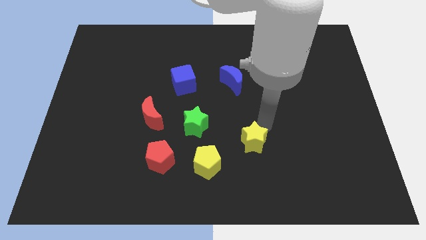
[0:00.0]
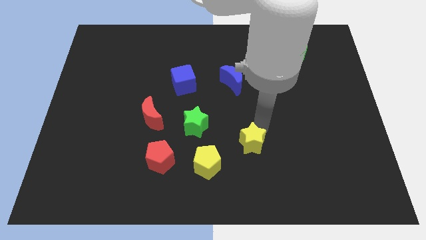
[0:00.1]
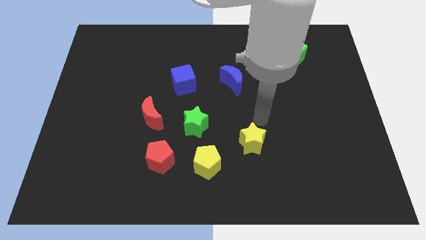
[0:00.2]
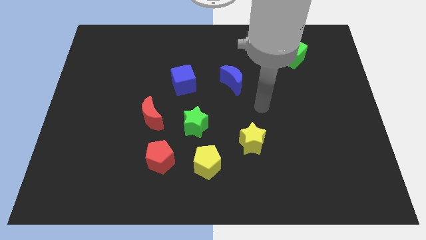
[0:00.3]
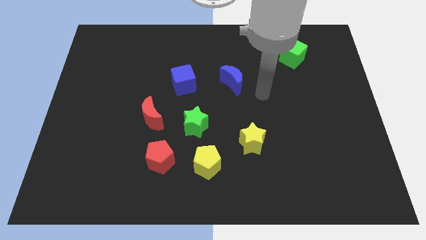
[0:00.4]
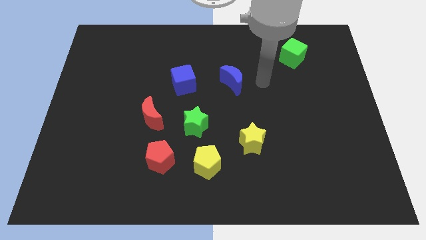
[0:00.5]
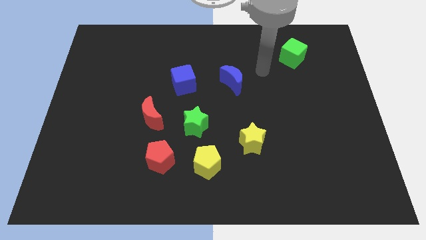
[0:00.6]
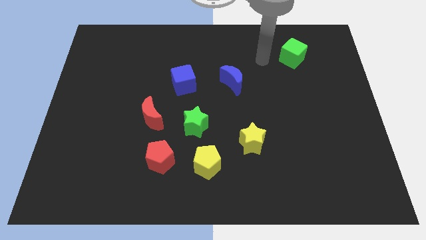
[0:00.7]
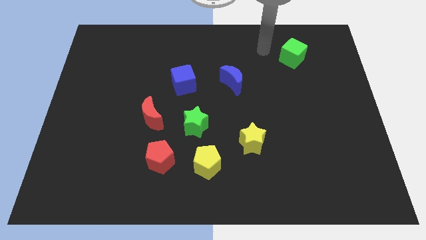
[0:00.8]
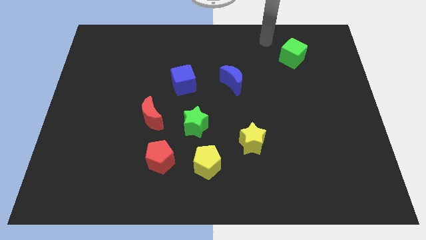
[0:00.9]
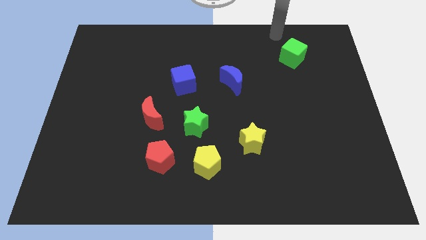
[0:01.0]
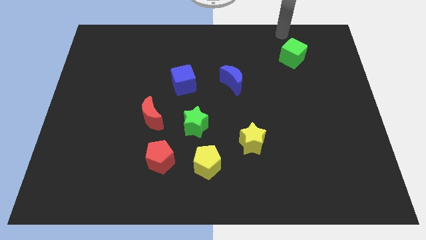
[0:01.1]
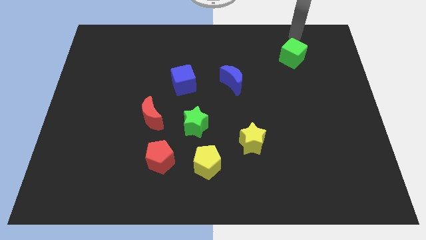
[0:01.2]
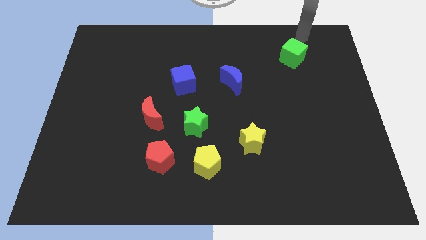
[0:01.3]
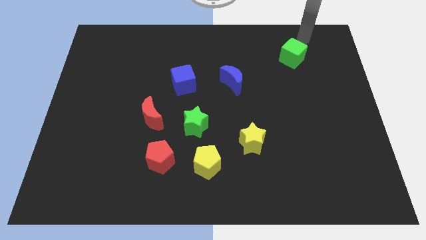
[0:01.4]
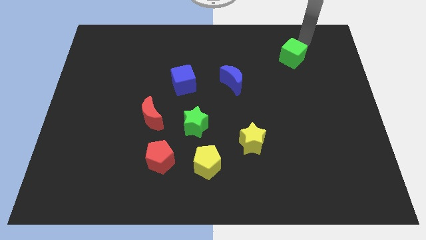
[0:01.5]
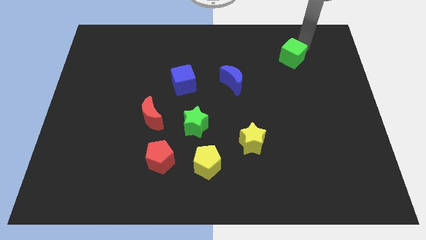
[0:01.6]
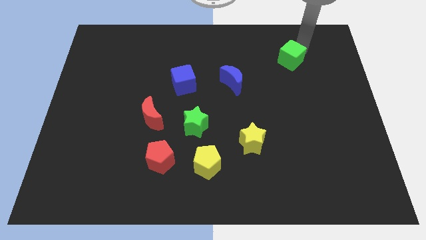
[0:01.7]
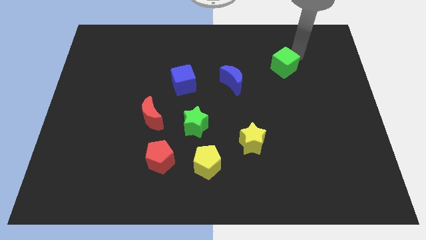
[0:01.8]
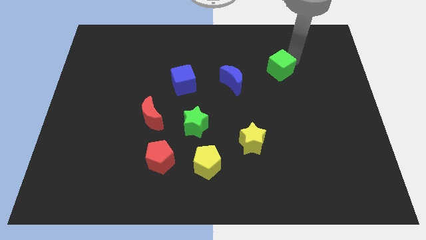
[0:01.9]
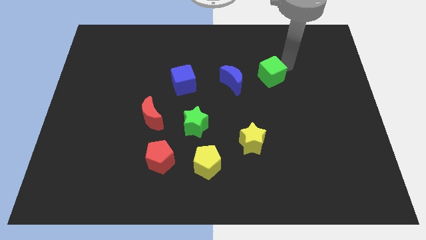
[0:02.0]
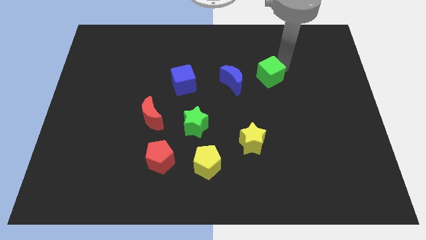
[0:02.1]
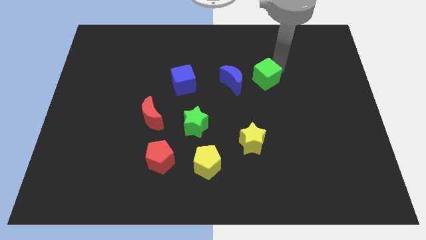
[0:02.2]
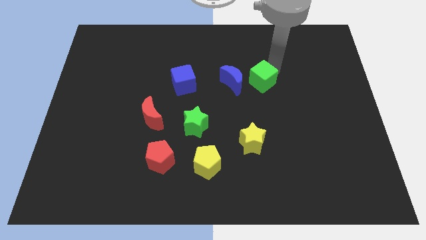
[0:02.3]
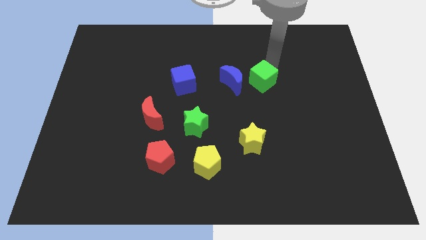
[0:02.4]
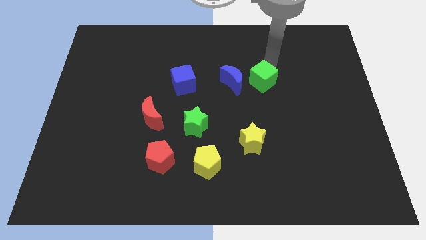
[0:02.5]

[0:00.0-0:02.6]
push green cube beside blue moon

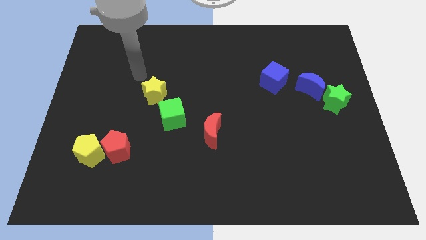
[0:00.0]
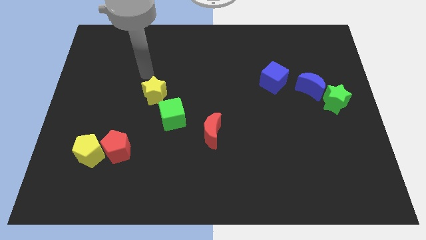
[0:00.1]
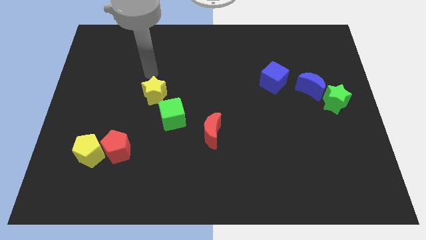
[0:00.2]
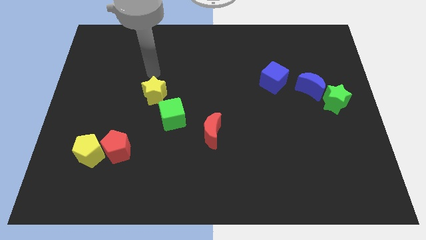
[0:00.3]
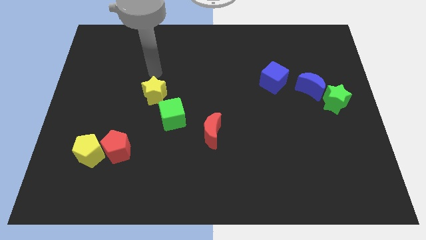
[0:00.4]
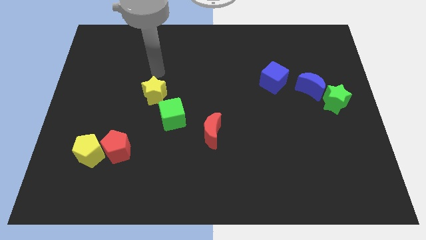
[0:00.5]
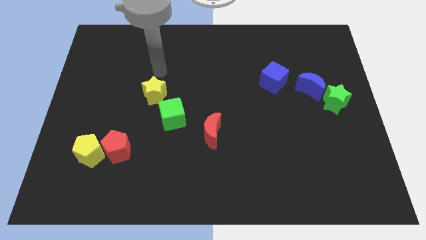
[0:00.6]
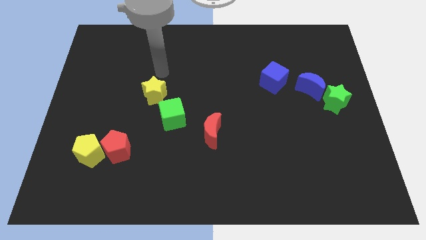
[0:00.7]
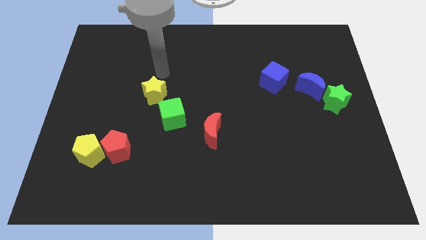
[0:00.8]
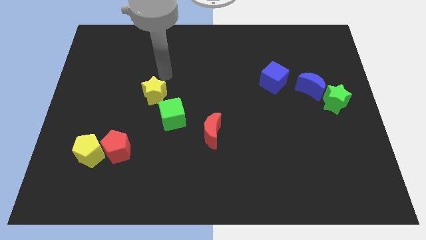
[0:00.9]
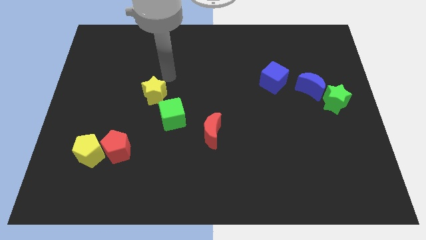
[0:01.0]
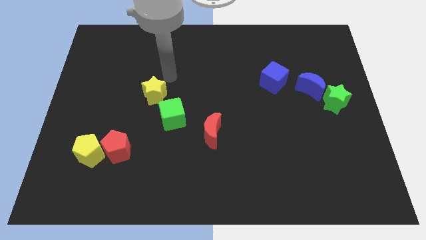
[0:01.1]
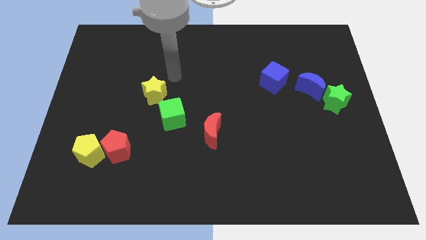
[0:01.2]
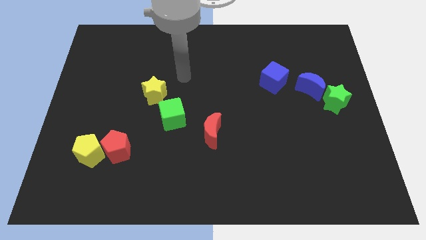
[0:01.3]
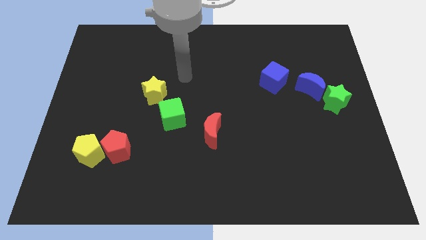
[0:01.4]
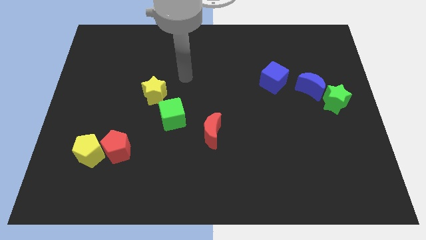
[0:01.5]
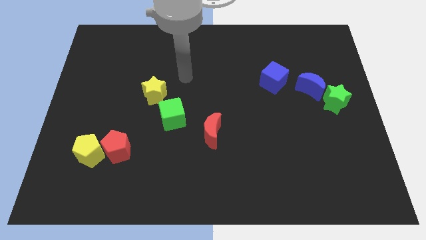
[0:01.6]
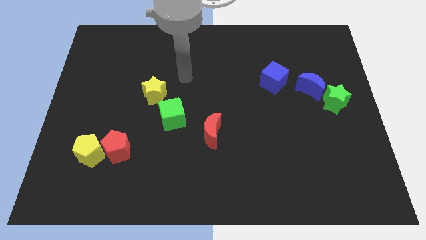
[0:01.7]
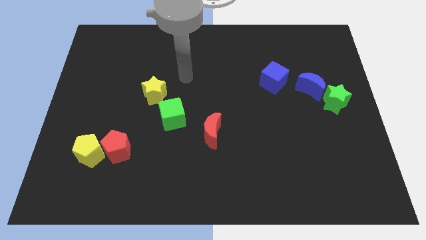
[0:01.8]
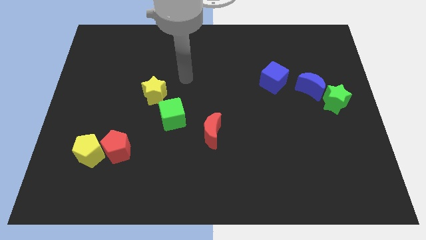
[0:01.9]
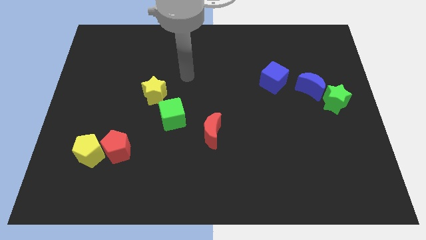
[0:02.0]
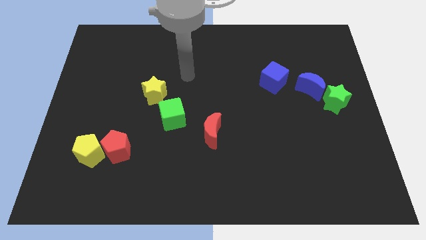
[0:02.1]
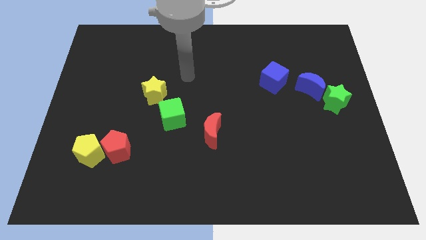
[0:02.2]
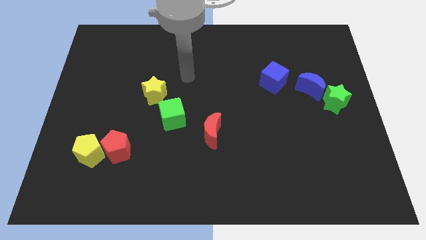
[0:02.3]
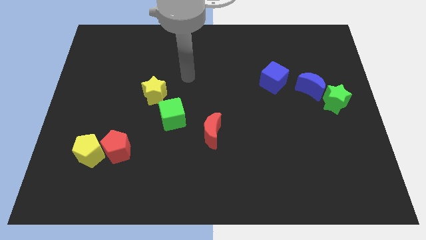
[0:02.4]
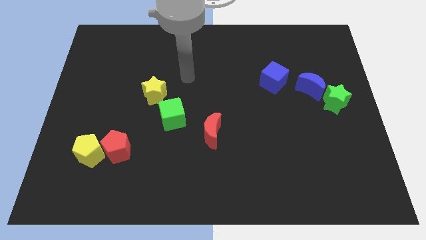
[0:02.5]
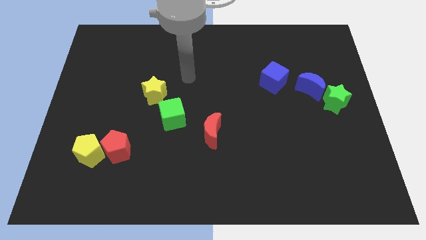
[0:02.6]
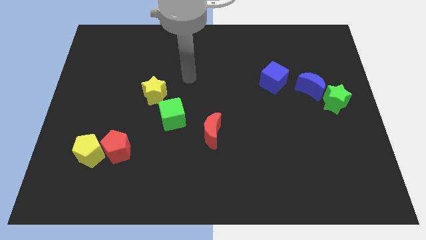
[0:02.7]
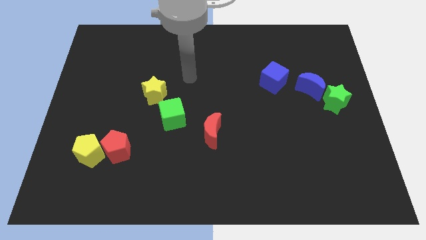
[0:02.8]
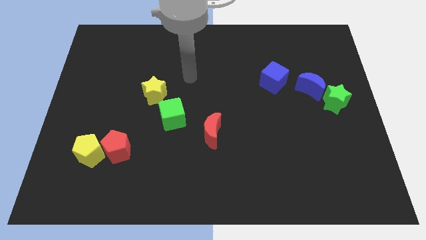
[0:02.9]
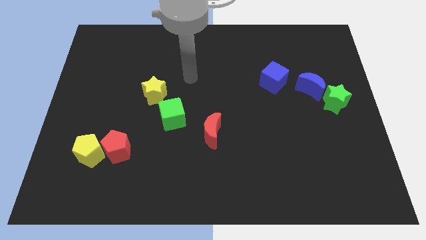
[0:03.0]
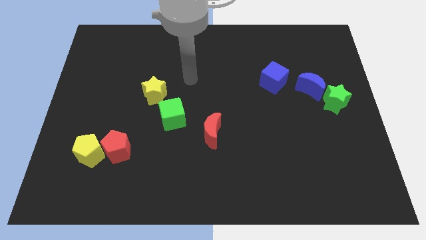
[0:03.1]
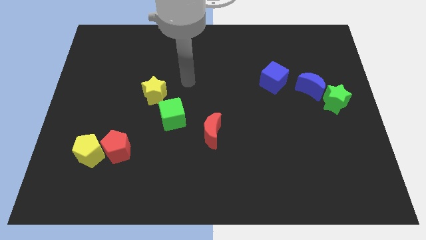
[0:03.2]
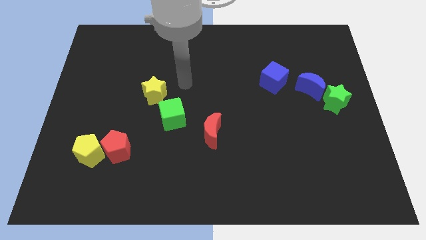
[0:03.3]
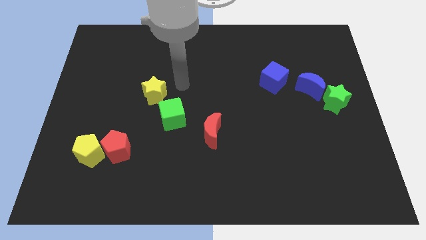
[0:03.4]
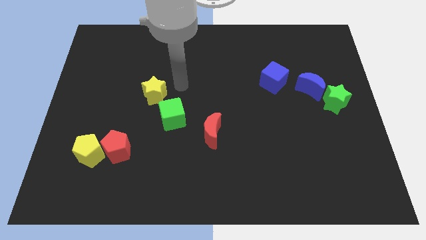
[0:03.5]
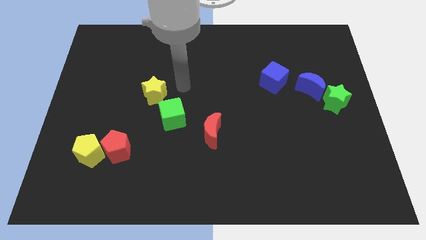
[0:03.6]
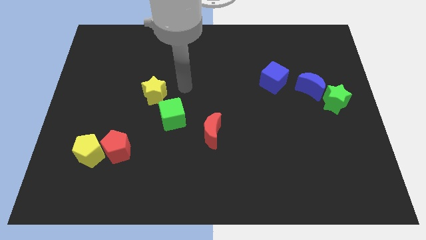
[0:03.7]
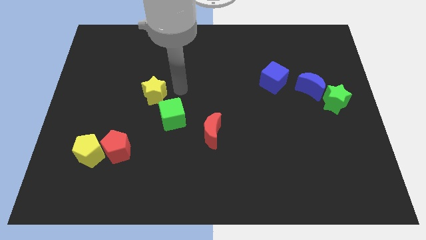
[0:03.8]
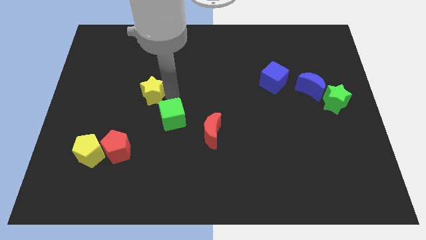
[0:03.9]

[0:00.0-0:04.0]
move your arm right to the yellow star

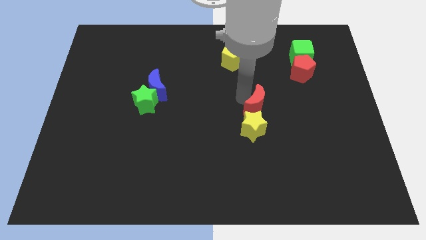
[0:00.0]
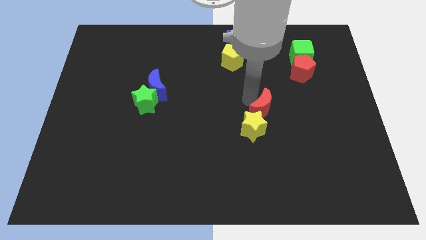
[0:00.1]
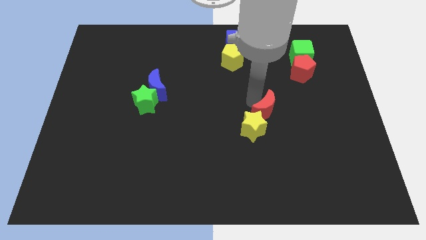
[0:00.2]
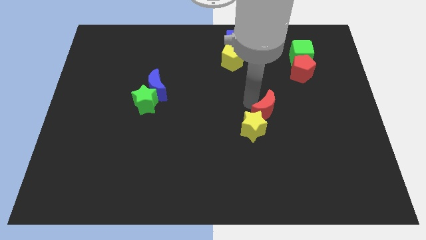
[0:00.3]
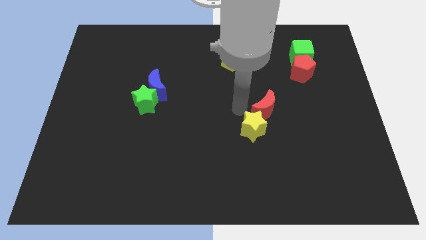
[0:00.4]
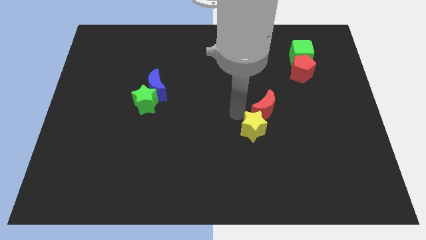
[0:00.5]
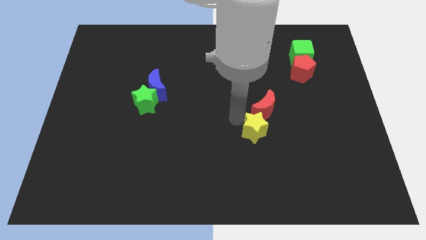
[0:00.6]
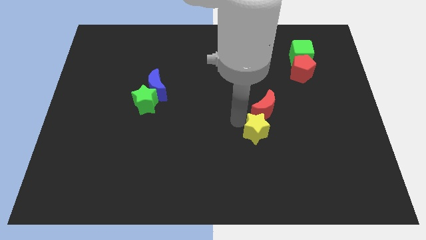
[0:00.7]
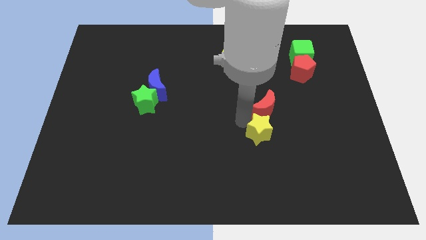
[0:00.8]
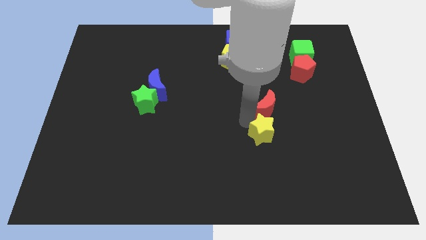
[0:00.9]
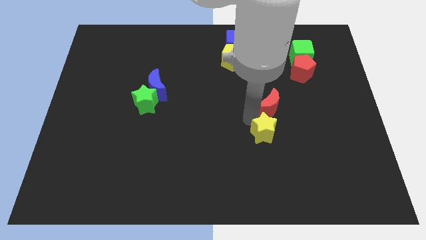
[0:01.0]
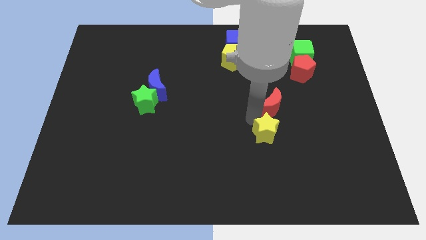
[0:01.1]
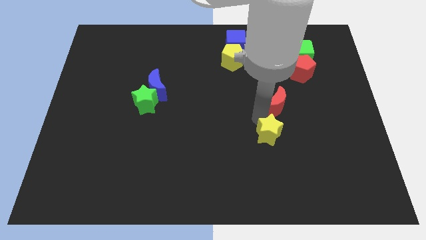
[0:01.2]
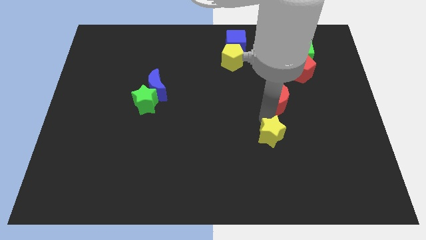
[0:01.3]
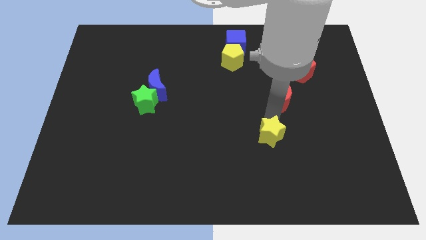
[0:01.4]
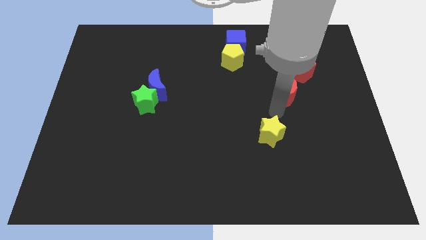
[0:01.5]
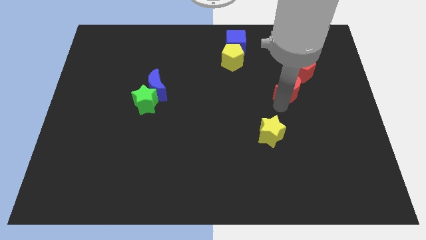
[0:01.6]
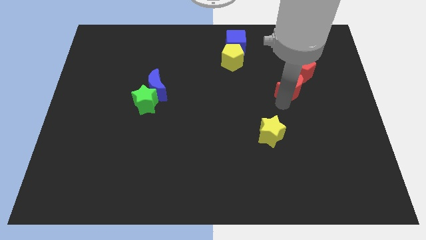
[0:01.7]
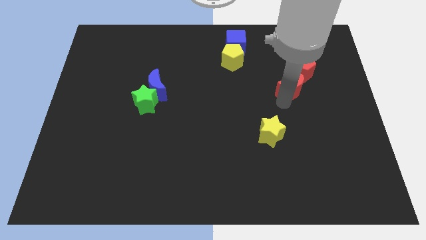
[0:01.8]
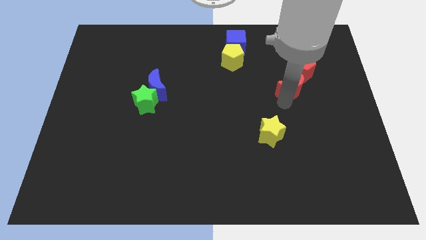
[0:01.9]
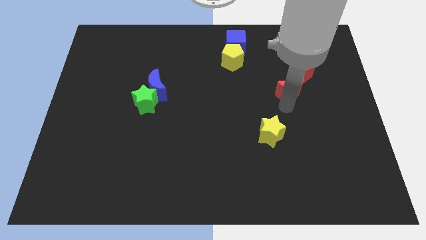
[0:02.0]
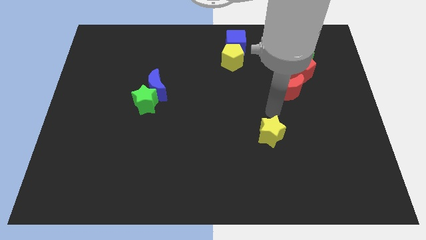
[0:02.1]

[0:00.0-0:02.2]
move red moon left below the red pentagon
